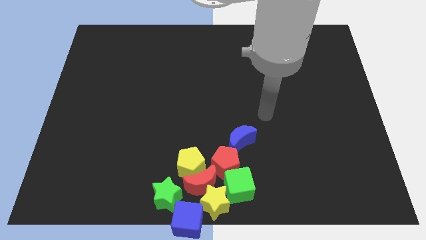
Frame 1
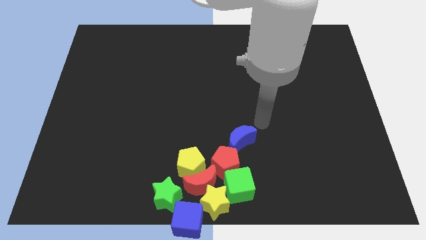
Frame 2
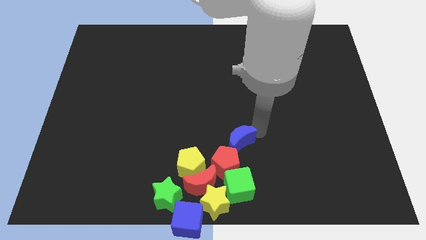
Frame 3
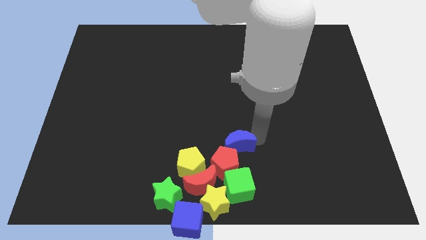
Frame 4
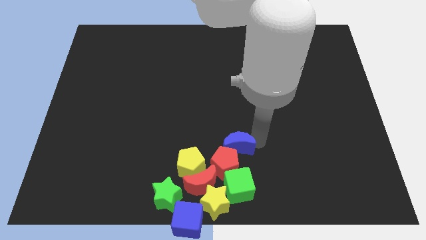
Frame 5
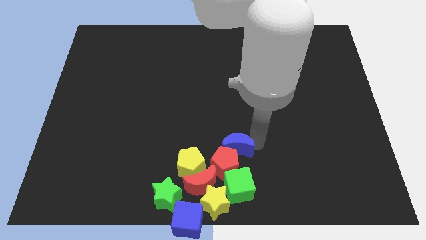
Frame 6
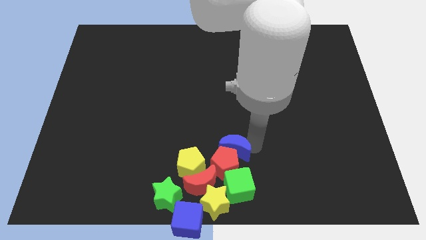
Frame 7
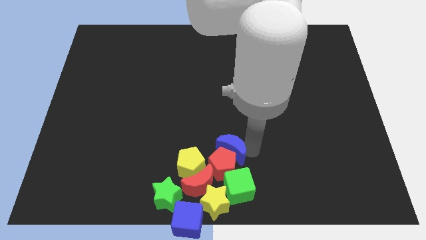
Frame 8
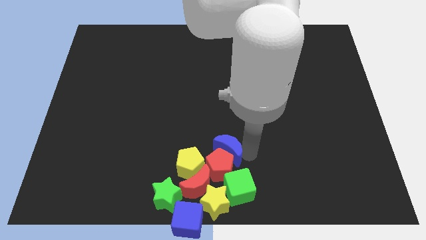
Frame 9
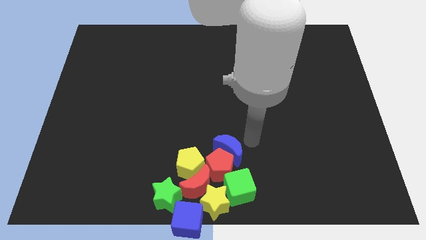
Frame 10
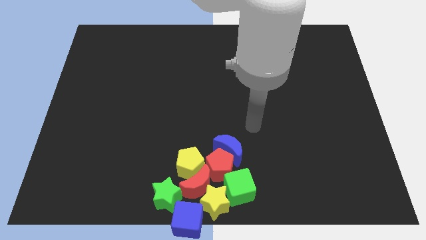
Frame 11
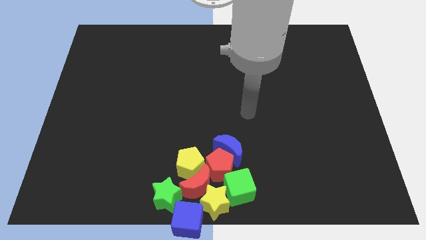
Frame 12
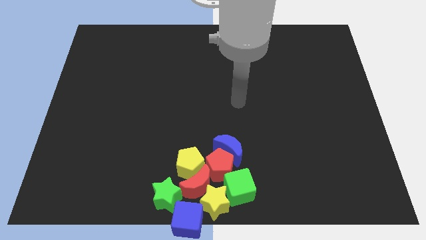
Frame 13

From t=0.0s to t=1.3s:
place blue crescent on top of red pentagon

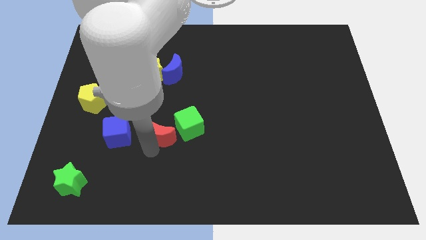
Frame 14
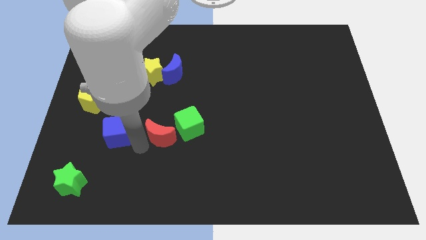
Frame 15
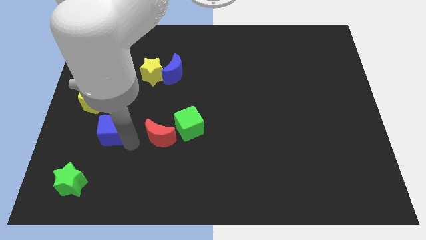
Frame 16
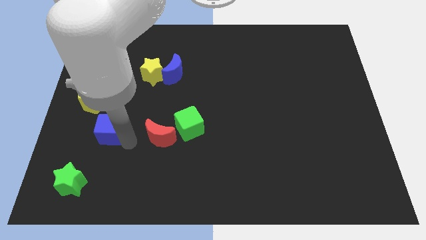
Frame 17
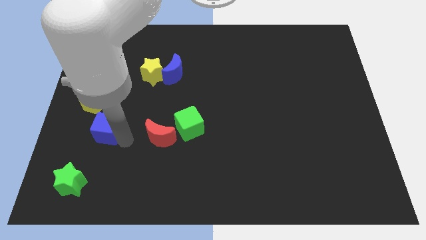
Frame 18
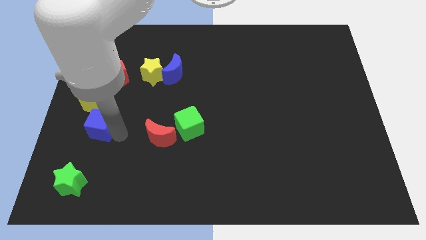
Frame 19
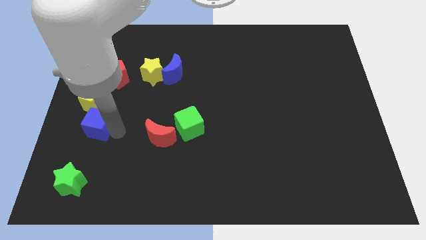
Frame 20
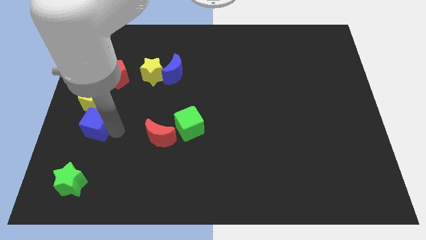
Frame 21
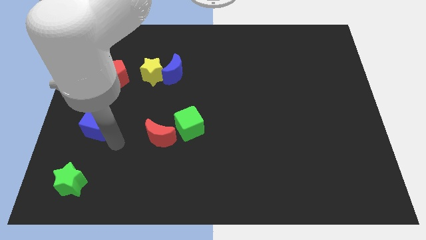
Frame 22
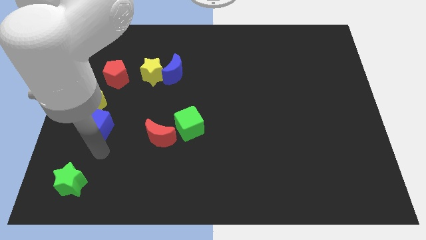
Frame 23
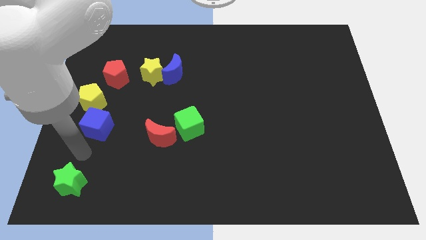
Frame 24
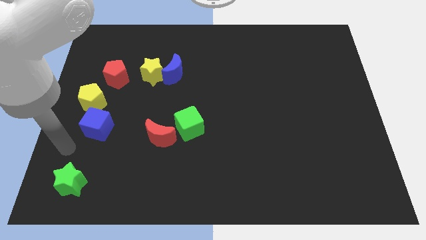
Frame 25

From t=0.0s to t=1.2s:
place the blue cube below the yellow pentagon

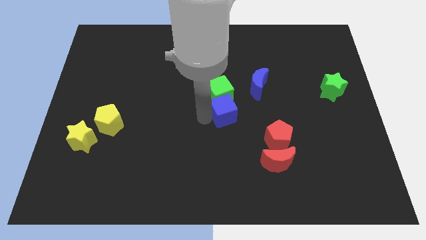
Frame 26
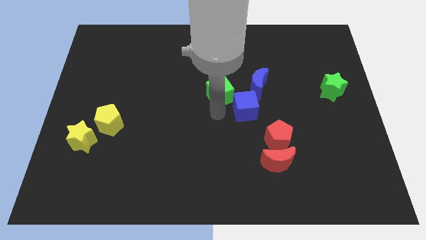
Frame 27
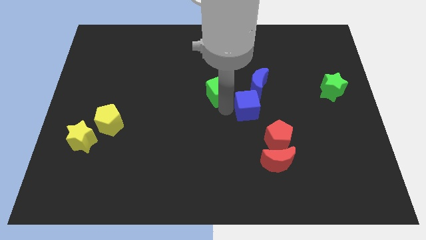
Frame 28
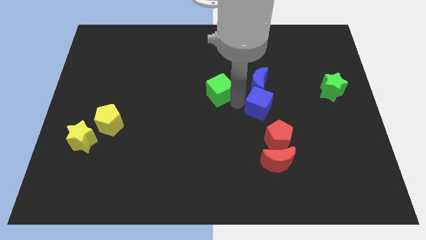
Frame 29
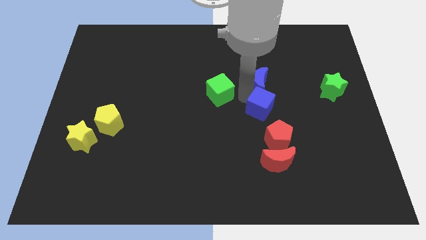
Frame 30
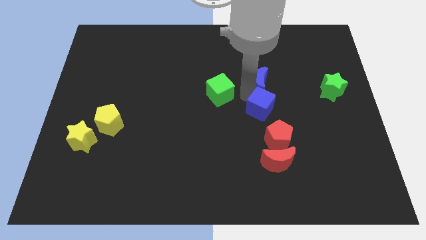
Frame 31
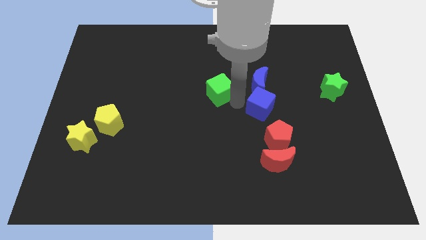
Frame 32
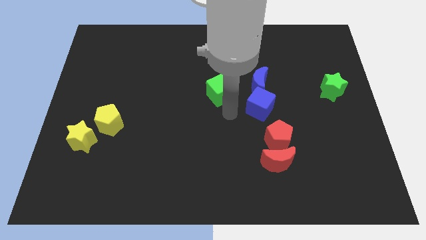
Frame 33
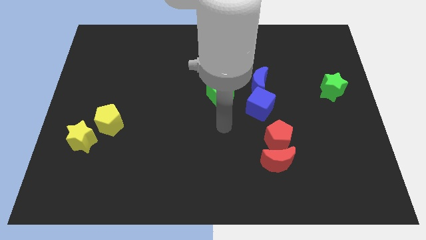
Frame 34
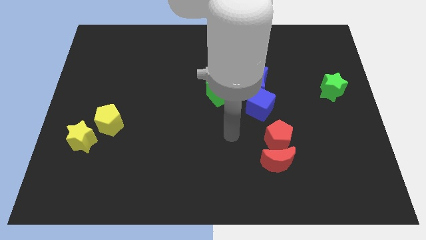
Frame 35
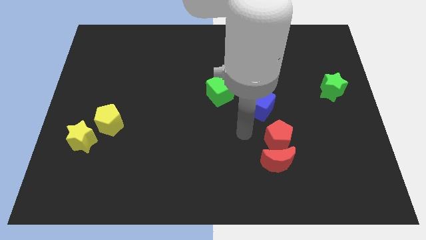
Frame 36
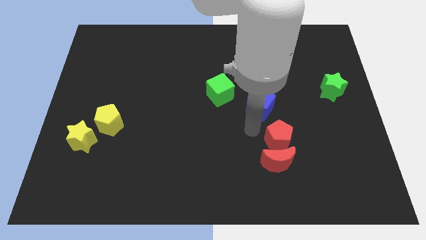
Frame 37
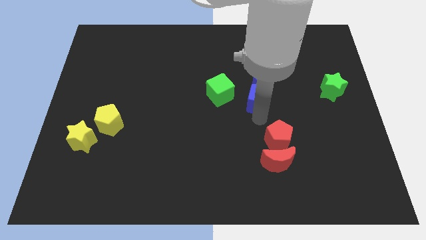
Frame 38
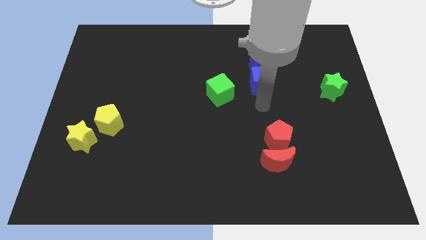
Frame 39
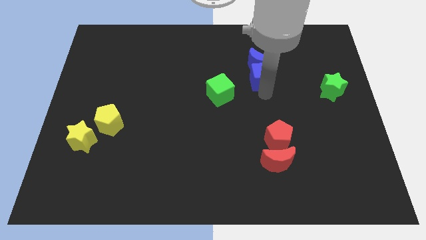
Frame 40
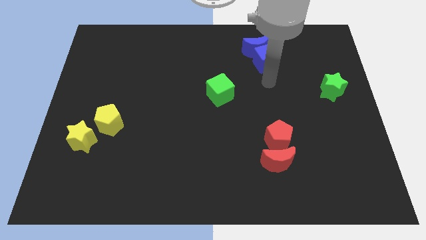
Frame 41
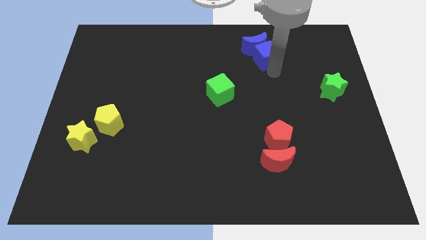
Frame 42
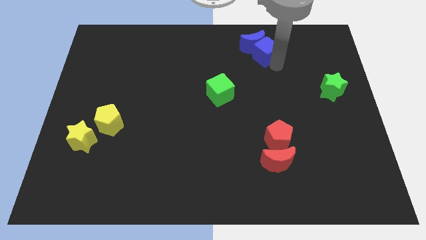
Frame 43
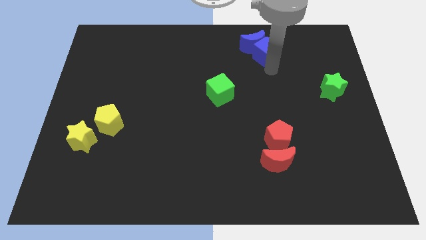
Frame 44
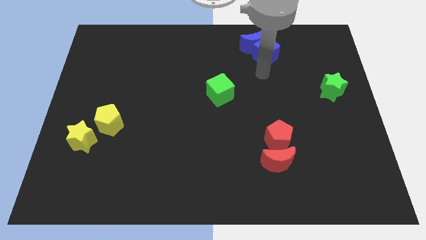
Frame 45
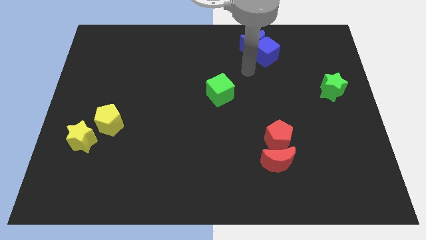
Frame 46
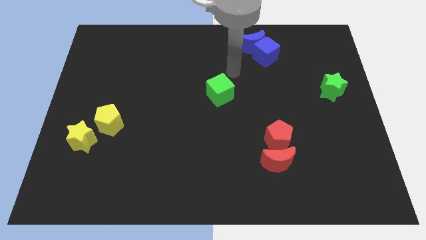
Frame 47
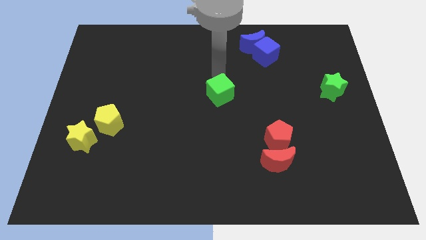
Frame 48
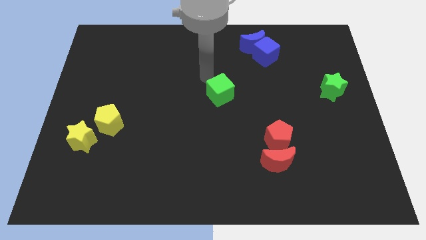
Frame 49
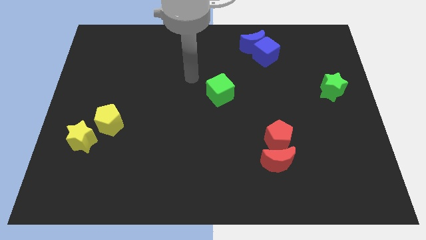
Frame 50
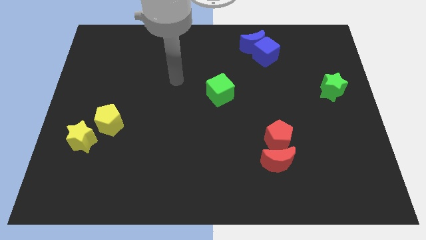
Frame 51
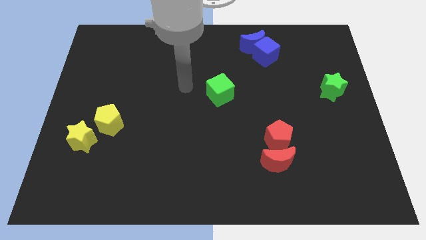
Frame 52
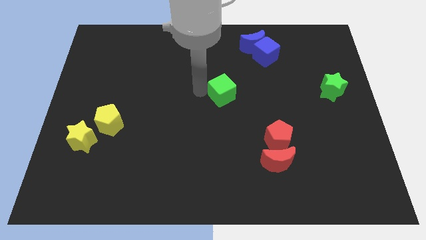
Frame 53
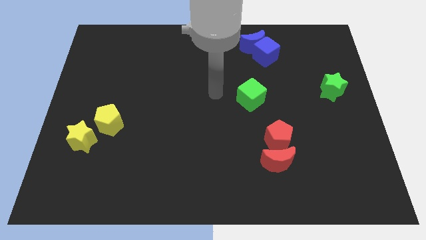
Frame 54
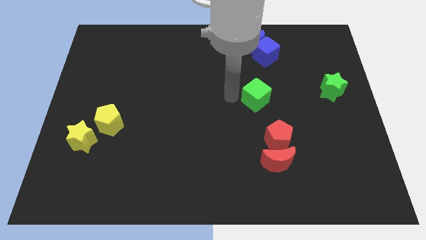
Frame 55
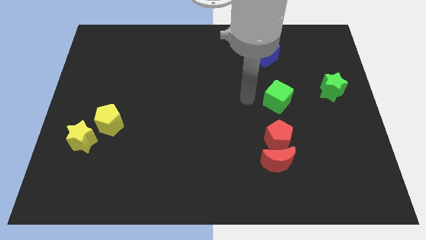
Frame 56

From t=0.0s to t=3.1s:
push the green cube above the red pentagon

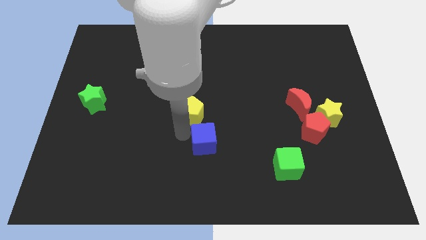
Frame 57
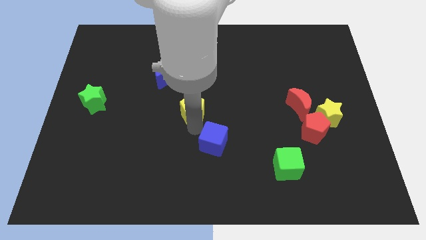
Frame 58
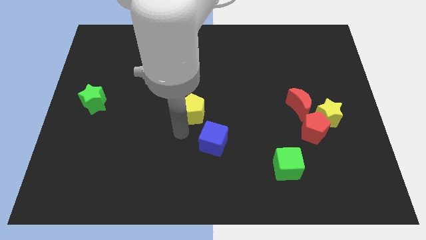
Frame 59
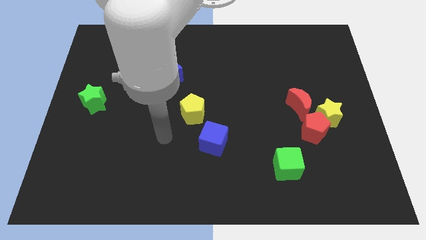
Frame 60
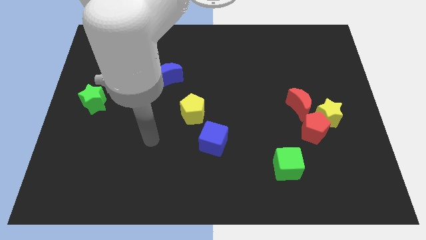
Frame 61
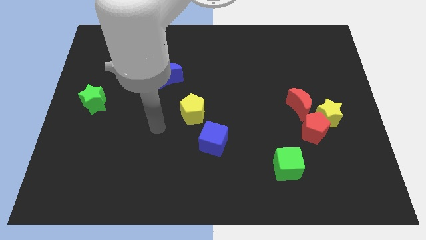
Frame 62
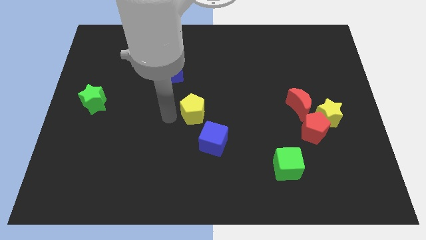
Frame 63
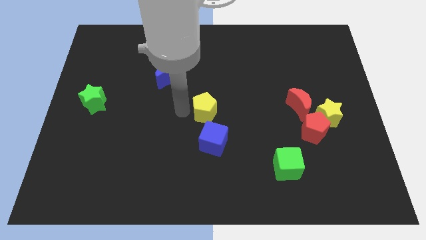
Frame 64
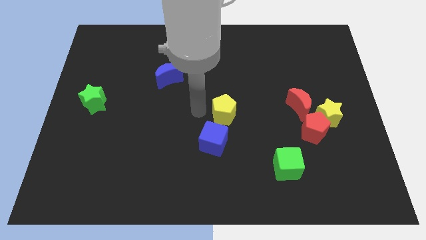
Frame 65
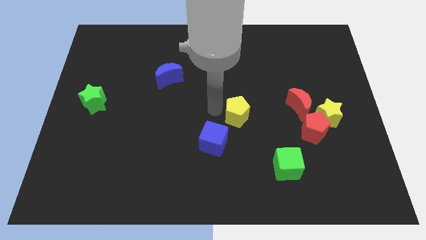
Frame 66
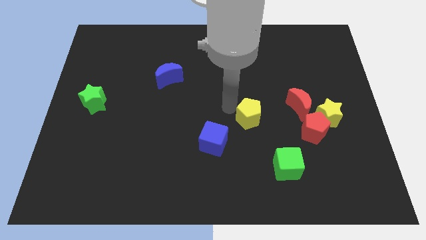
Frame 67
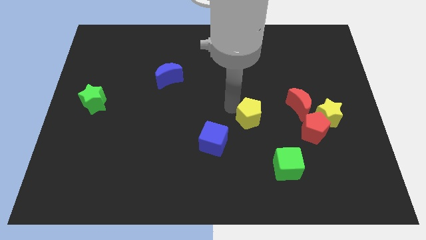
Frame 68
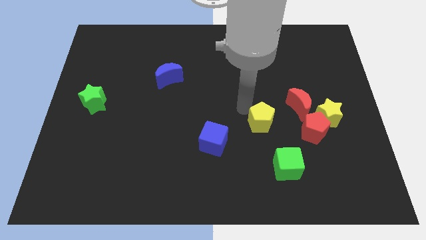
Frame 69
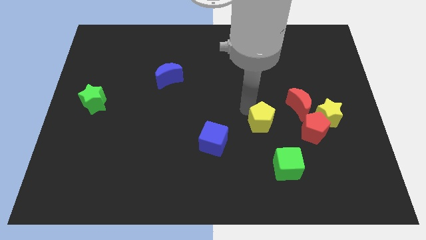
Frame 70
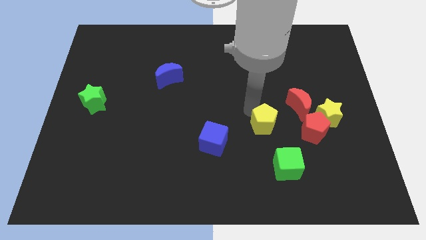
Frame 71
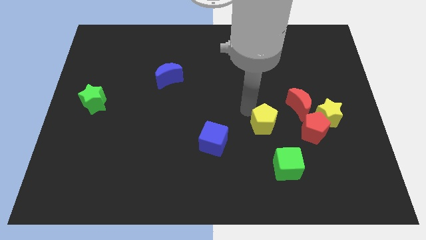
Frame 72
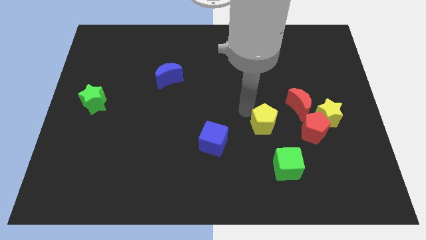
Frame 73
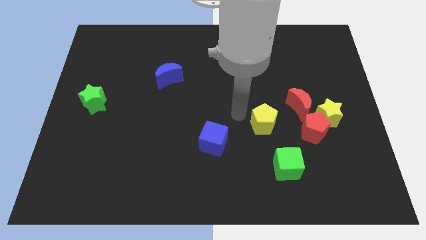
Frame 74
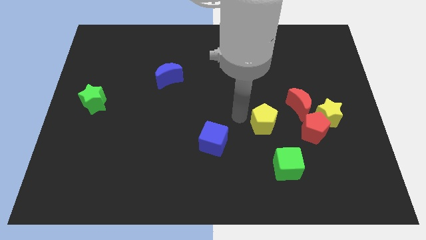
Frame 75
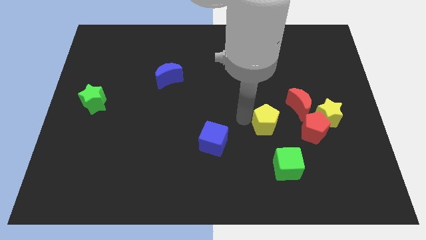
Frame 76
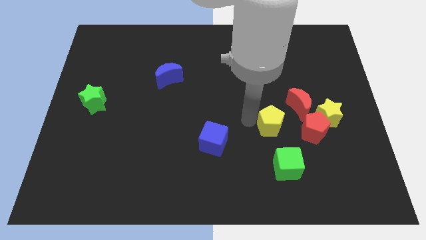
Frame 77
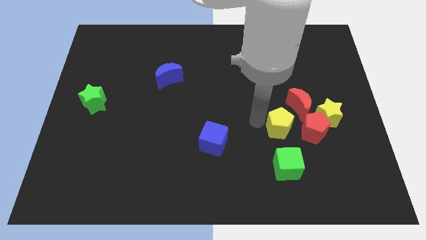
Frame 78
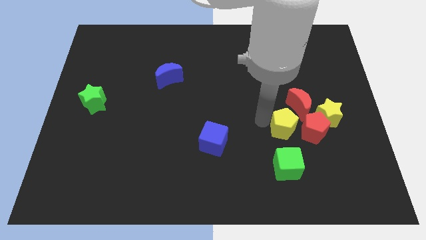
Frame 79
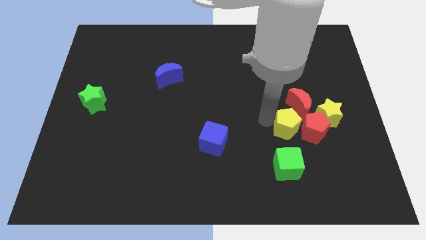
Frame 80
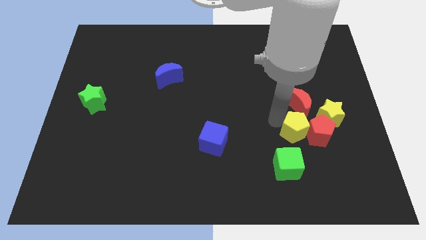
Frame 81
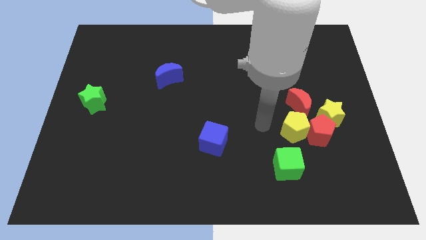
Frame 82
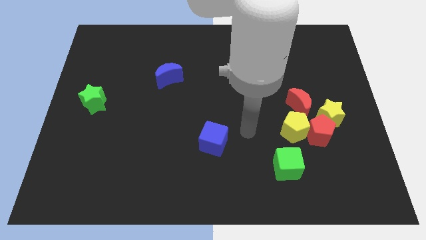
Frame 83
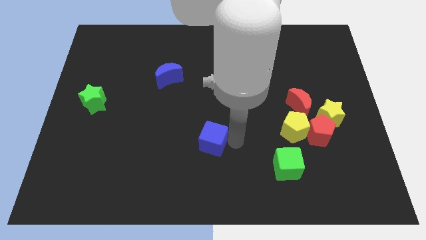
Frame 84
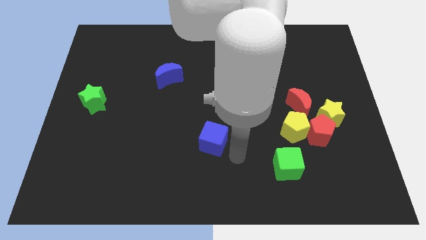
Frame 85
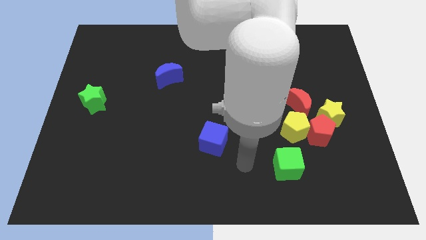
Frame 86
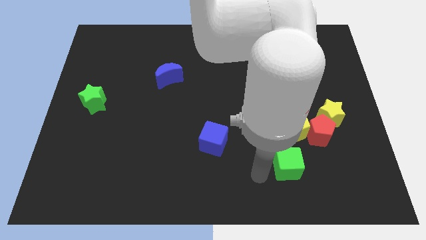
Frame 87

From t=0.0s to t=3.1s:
move the yellow pentagon at the left side of the red pentagon

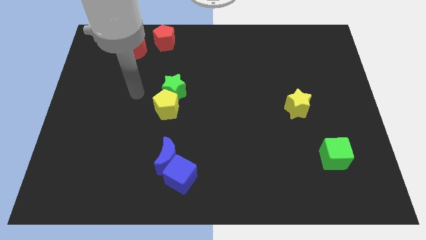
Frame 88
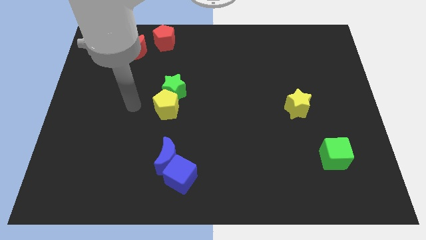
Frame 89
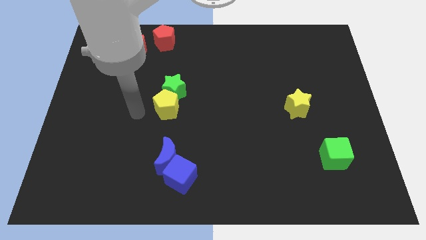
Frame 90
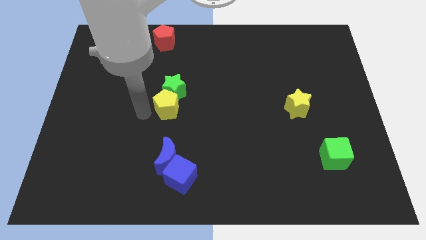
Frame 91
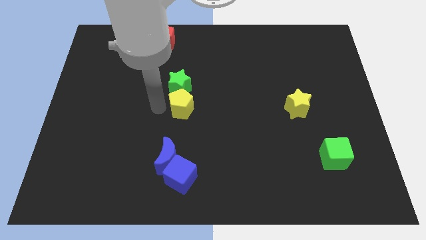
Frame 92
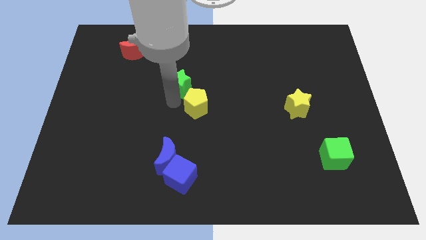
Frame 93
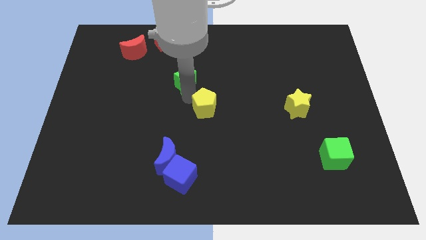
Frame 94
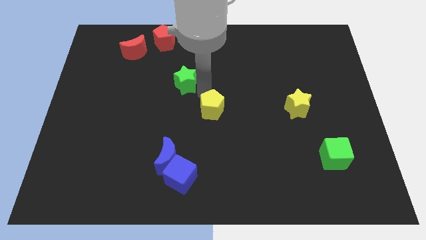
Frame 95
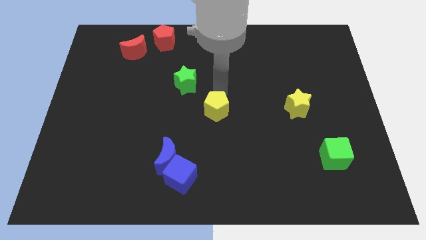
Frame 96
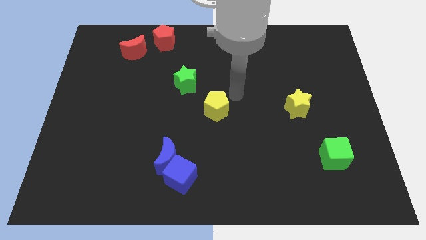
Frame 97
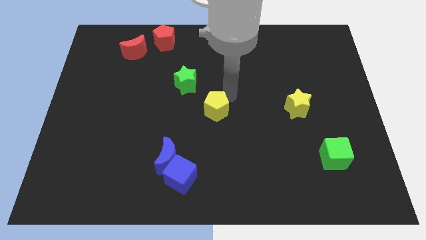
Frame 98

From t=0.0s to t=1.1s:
separate green star and yellow pentagon
